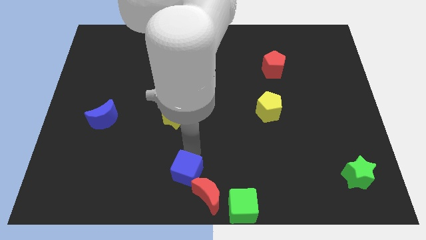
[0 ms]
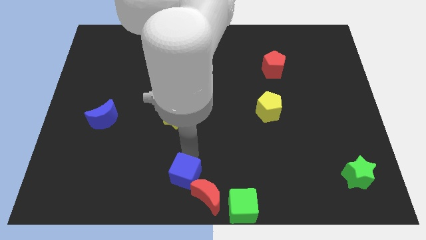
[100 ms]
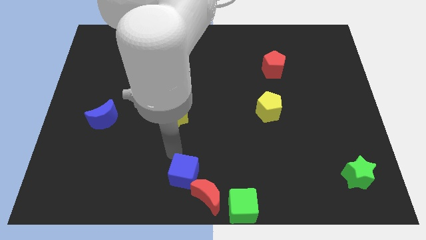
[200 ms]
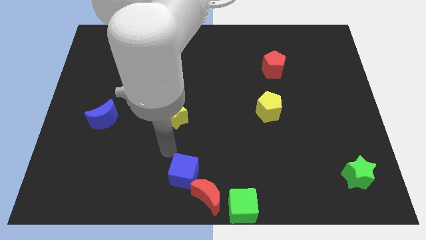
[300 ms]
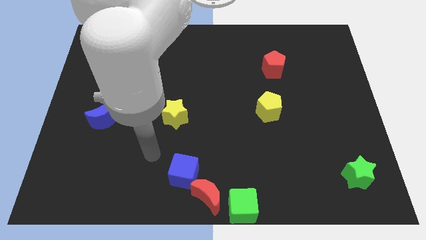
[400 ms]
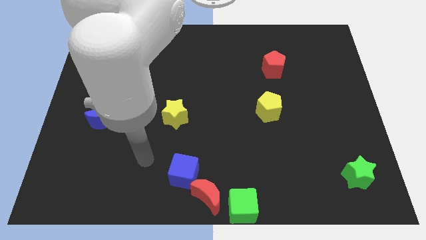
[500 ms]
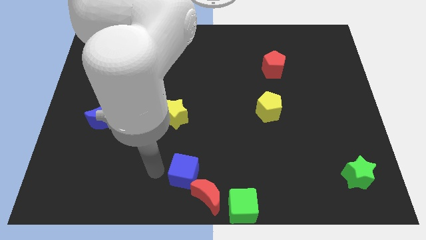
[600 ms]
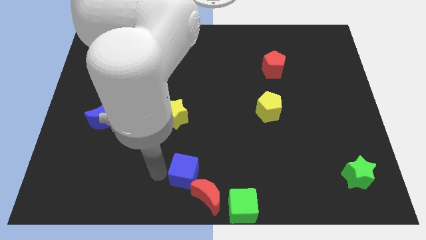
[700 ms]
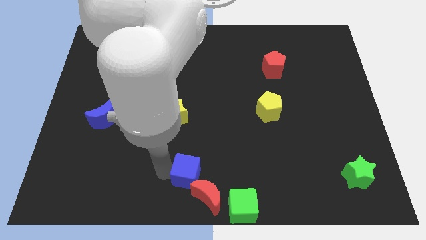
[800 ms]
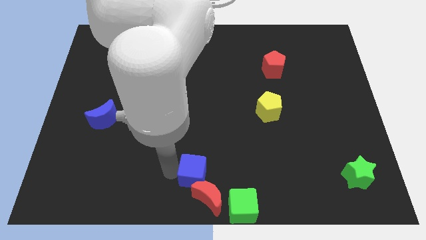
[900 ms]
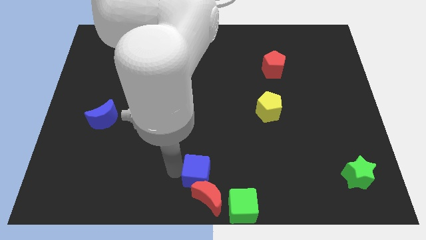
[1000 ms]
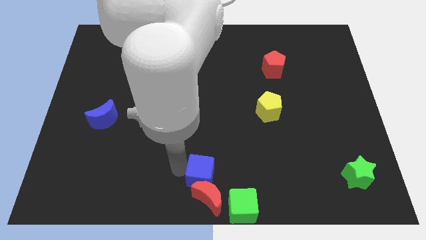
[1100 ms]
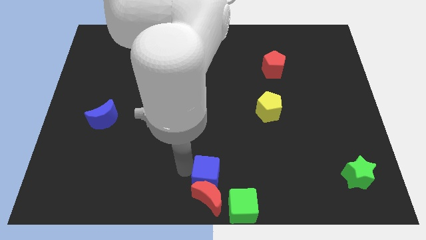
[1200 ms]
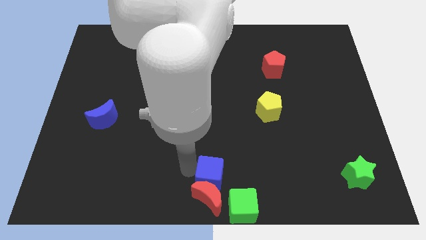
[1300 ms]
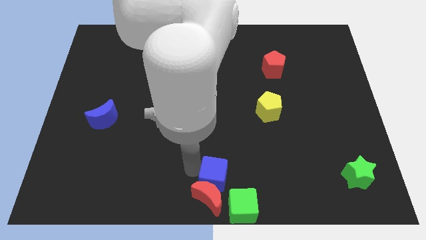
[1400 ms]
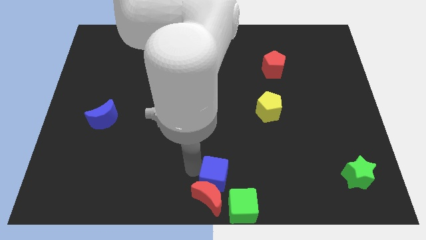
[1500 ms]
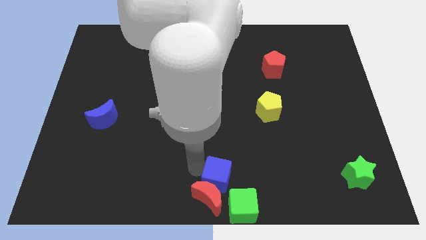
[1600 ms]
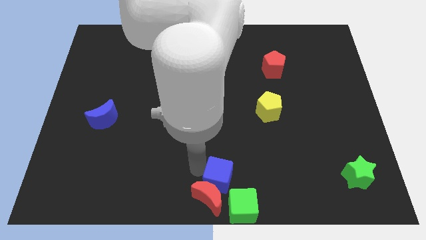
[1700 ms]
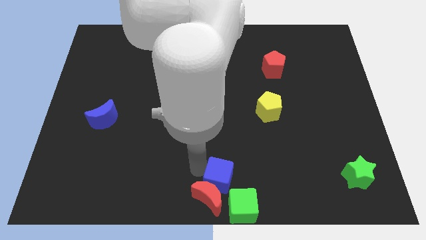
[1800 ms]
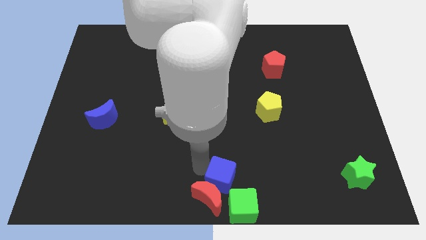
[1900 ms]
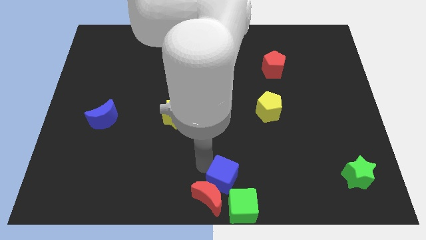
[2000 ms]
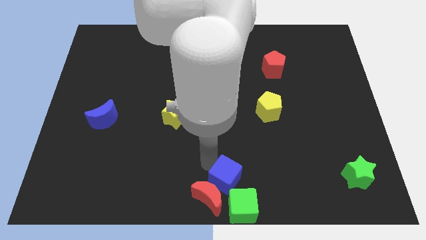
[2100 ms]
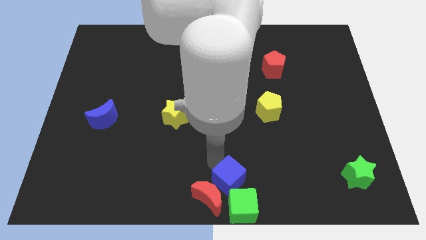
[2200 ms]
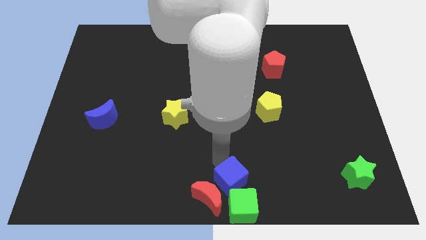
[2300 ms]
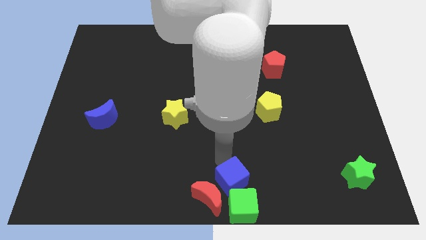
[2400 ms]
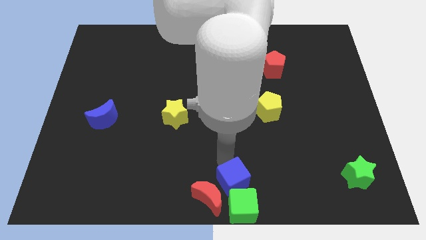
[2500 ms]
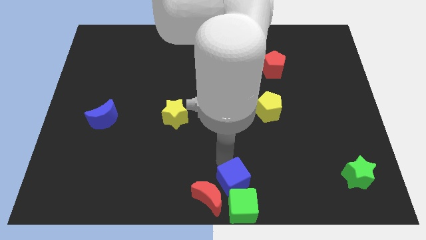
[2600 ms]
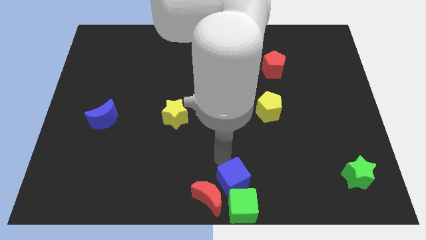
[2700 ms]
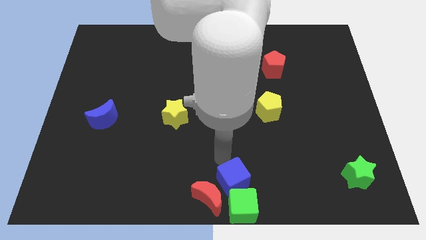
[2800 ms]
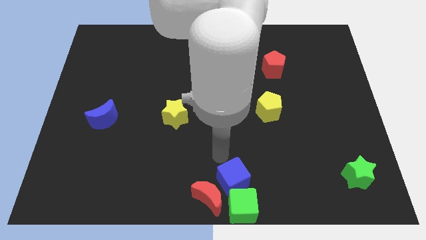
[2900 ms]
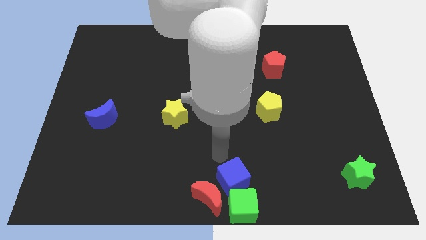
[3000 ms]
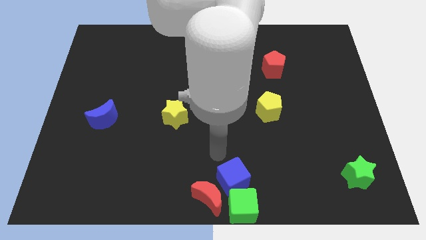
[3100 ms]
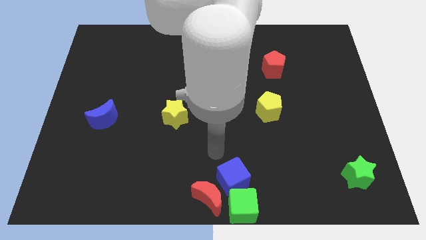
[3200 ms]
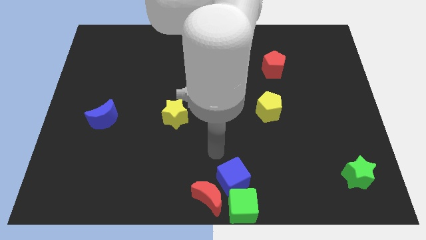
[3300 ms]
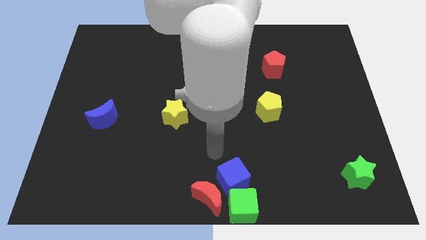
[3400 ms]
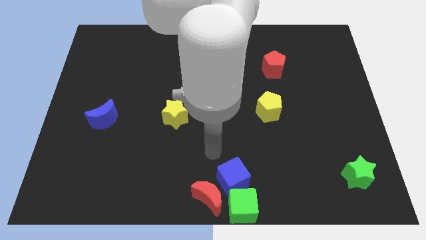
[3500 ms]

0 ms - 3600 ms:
move the blue cube into the green cube

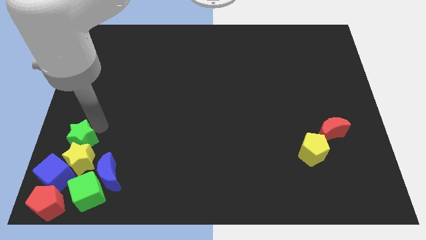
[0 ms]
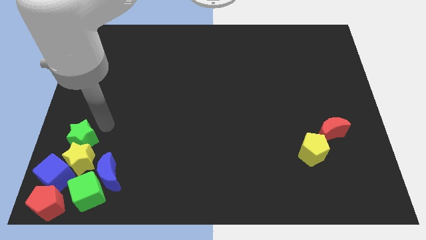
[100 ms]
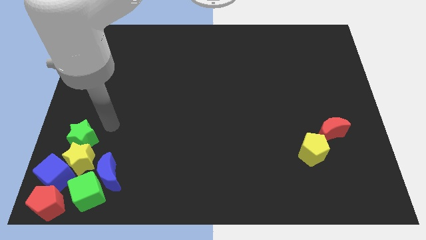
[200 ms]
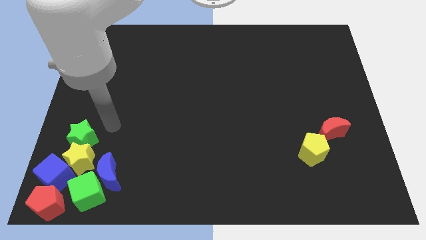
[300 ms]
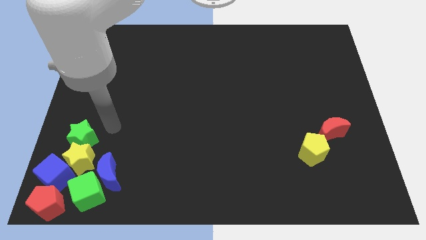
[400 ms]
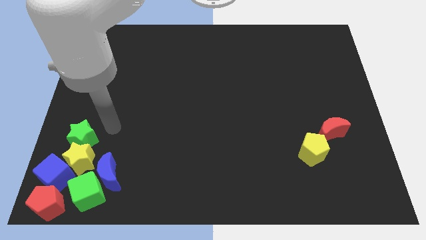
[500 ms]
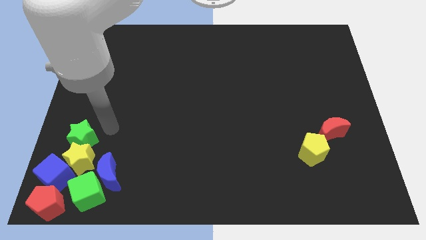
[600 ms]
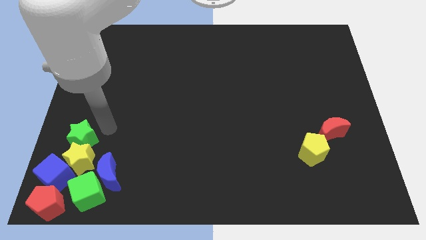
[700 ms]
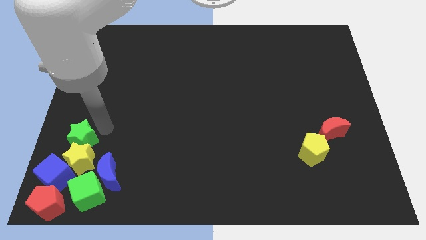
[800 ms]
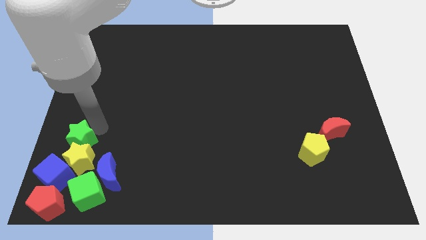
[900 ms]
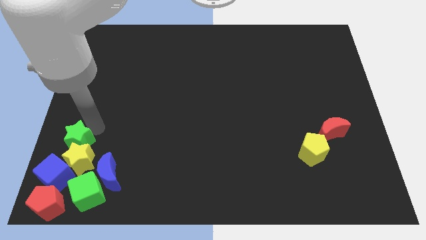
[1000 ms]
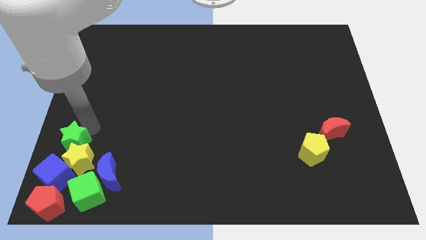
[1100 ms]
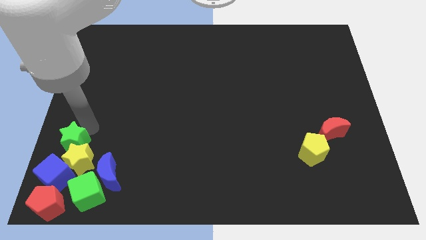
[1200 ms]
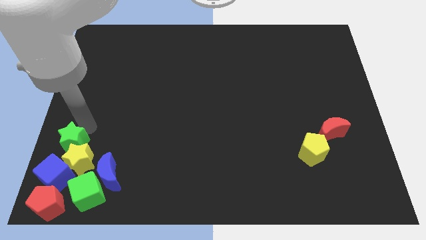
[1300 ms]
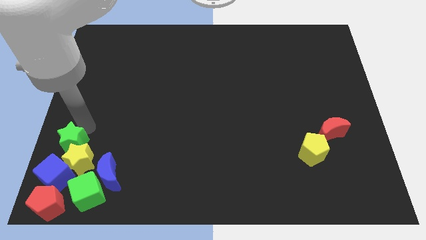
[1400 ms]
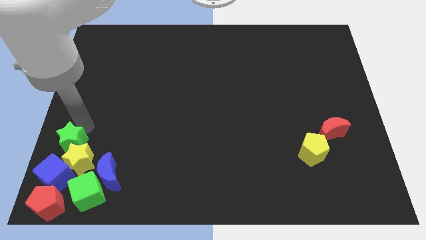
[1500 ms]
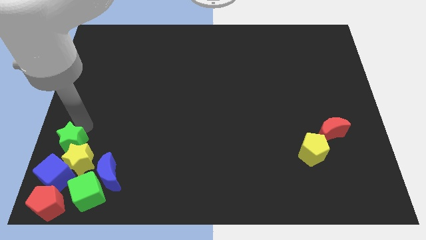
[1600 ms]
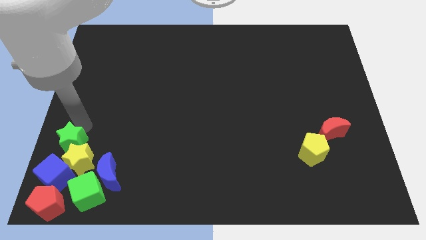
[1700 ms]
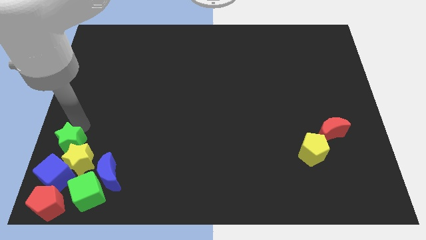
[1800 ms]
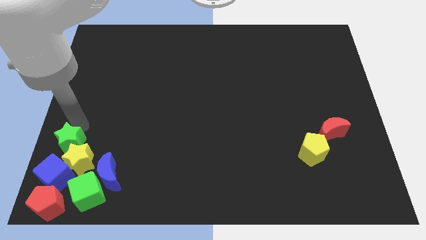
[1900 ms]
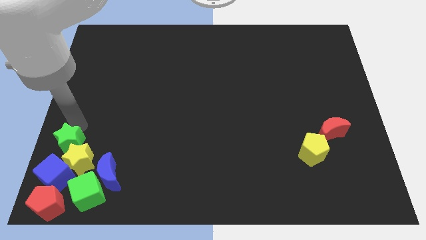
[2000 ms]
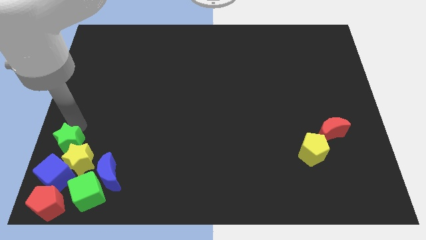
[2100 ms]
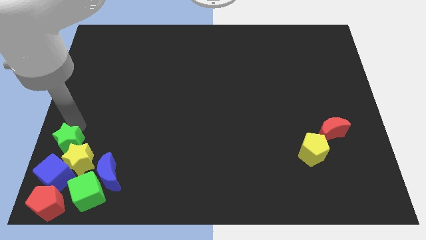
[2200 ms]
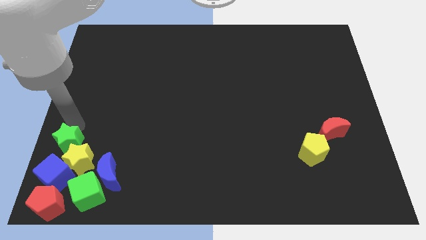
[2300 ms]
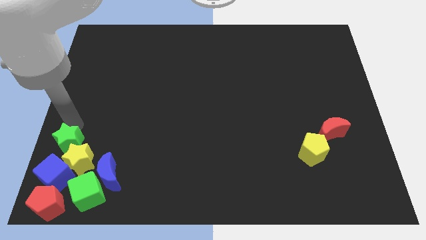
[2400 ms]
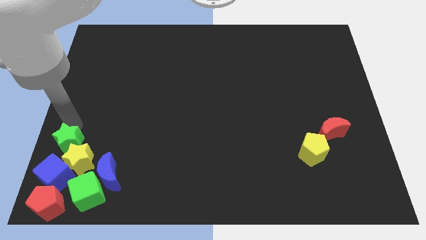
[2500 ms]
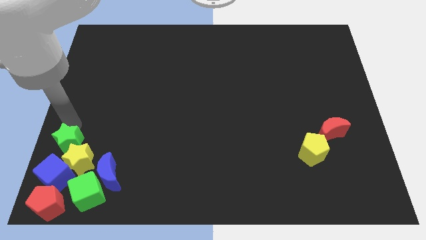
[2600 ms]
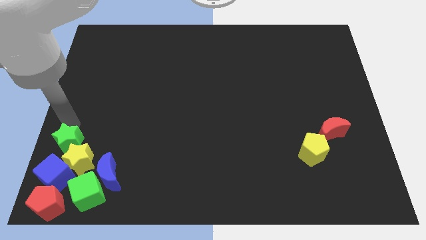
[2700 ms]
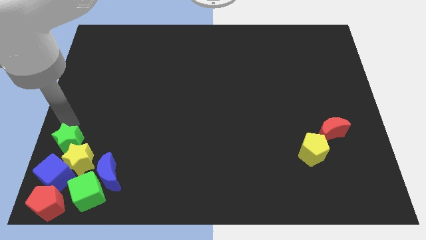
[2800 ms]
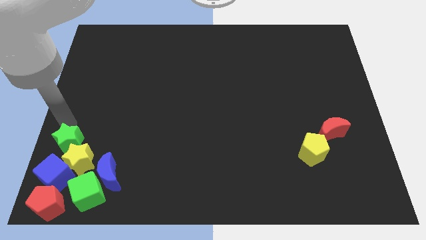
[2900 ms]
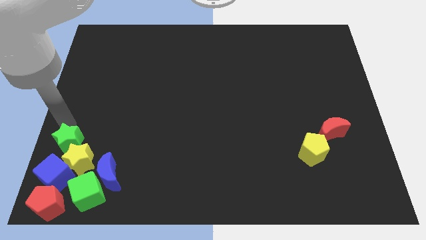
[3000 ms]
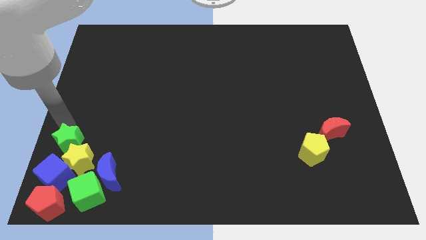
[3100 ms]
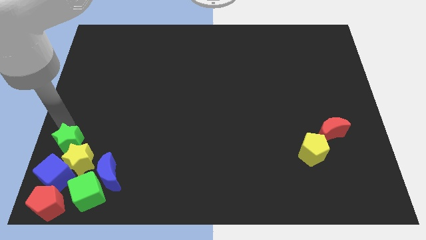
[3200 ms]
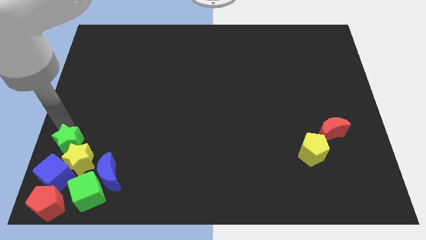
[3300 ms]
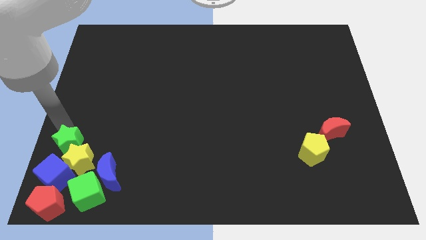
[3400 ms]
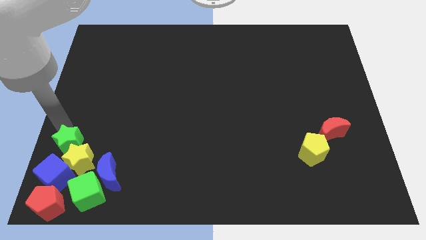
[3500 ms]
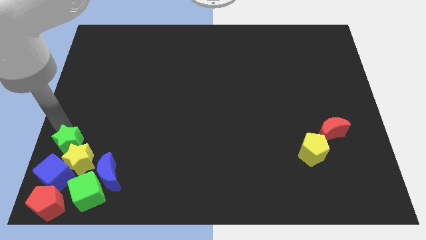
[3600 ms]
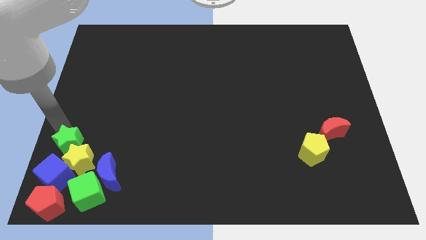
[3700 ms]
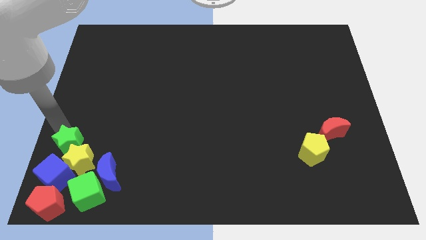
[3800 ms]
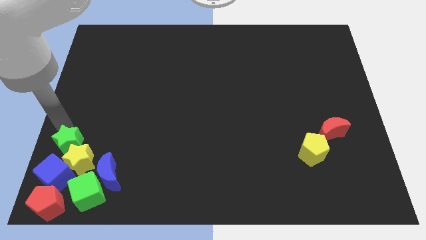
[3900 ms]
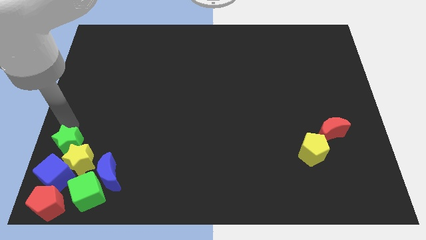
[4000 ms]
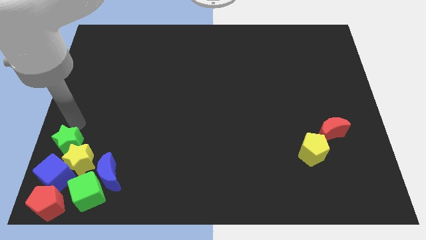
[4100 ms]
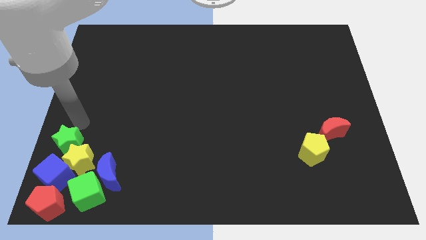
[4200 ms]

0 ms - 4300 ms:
move the green star into the top side of the yellow star

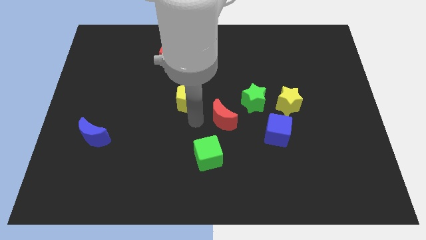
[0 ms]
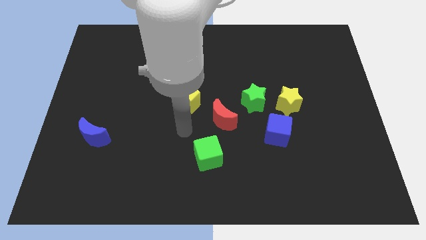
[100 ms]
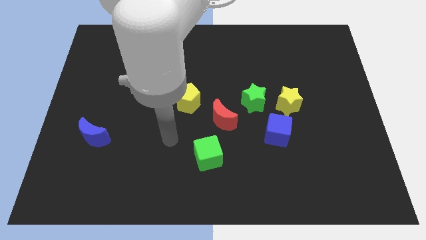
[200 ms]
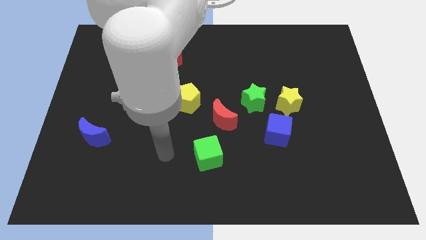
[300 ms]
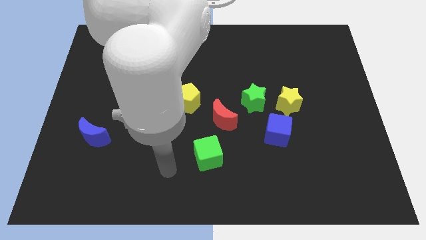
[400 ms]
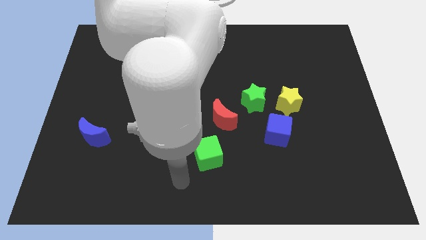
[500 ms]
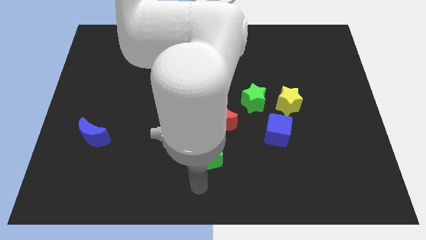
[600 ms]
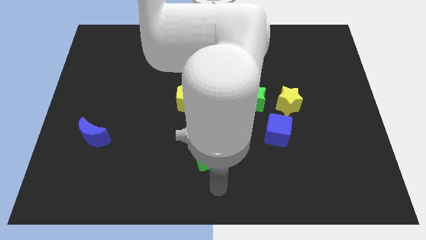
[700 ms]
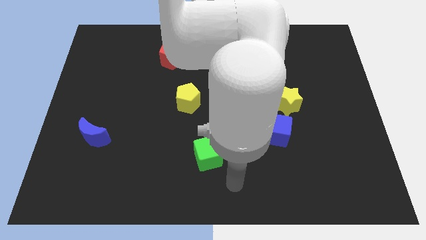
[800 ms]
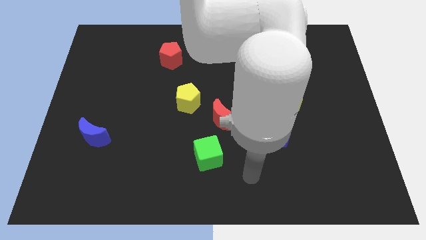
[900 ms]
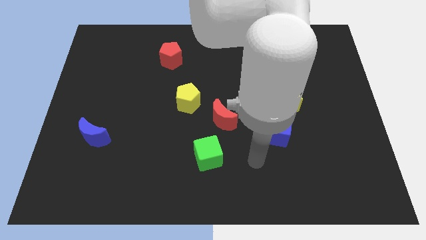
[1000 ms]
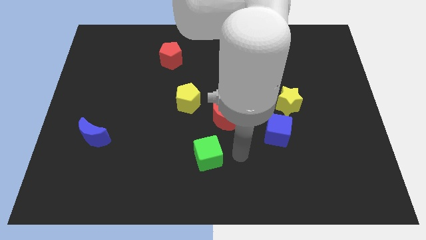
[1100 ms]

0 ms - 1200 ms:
move your arm around the green cube
